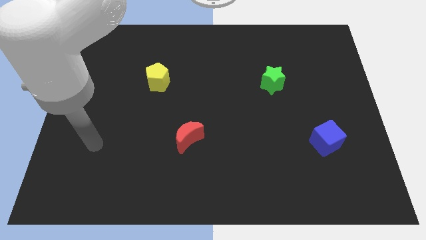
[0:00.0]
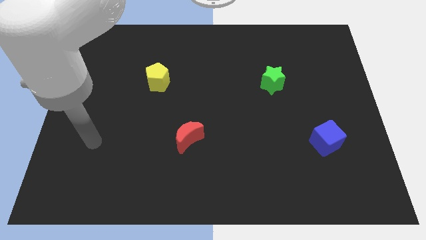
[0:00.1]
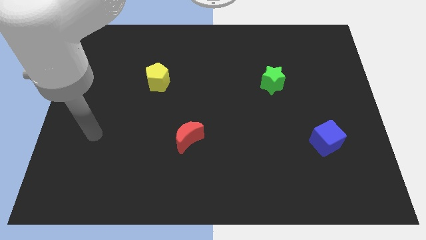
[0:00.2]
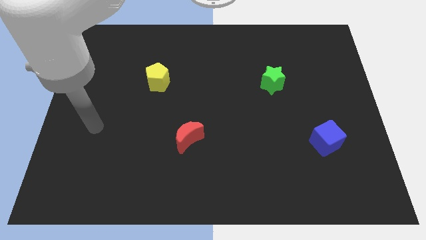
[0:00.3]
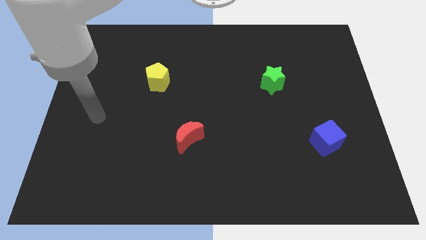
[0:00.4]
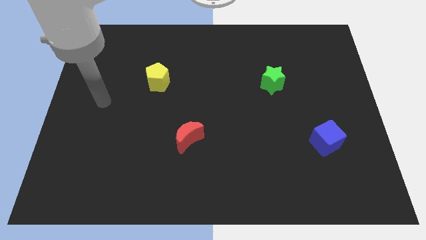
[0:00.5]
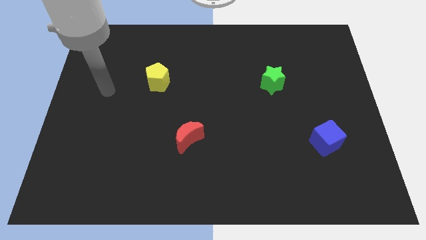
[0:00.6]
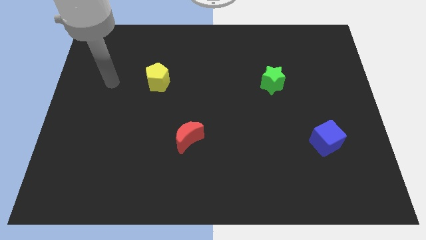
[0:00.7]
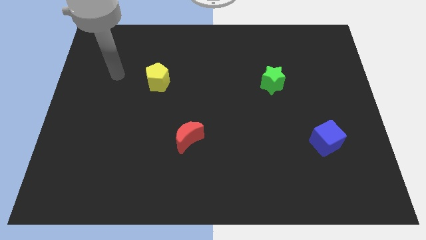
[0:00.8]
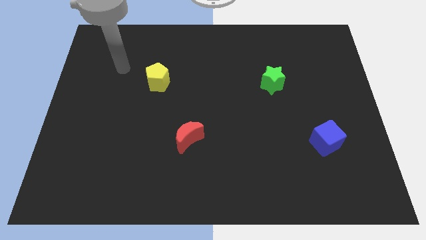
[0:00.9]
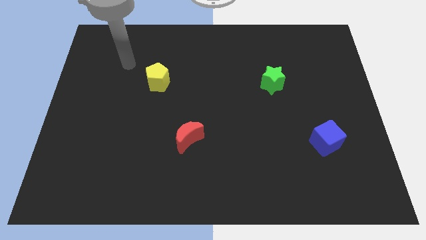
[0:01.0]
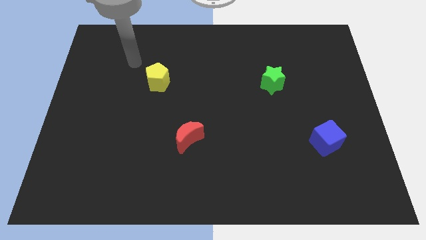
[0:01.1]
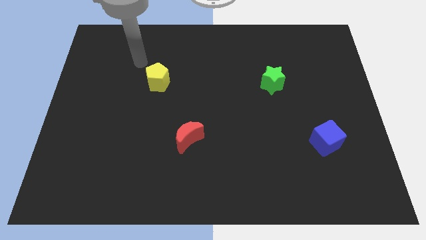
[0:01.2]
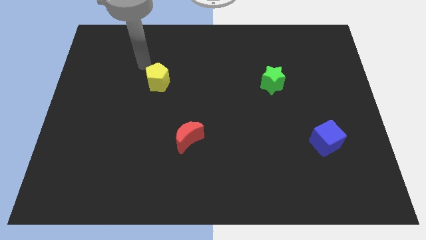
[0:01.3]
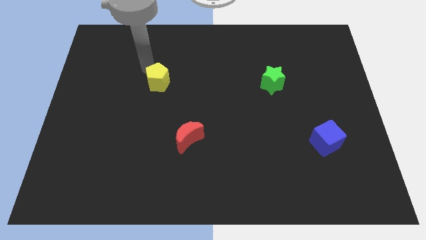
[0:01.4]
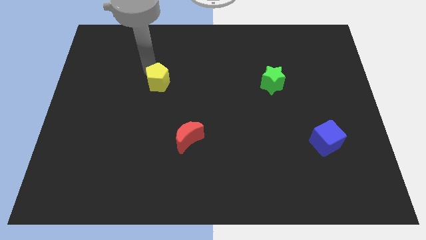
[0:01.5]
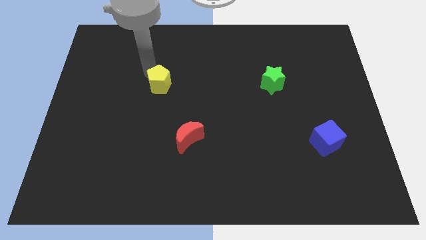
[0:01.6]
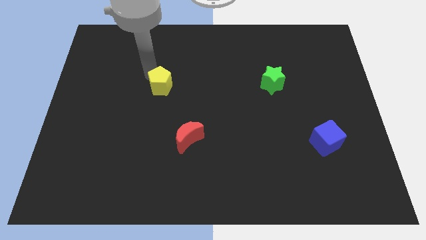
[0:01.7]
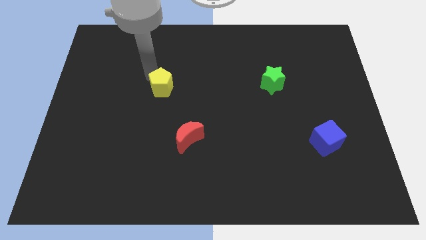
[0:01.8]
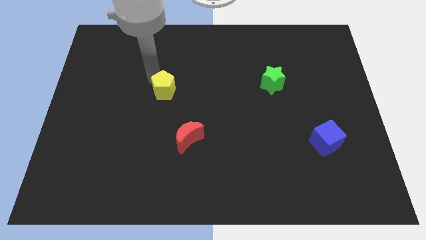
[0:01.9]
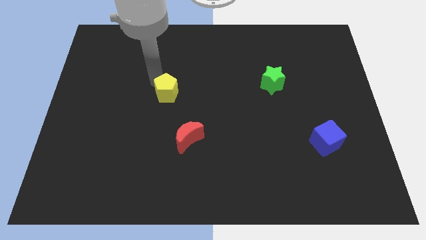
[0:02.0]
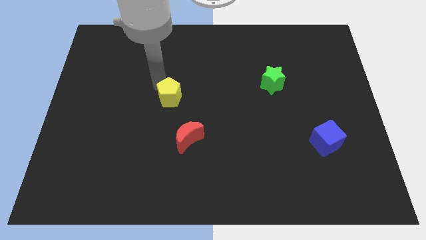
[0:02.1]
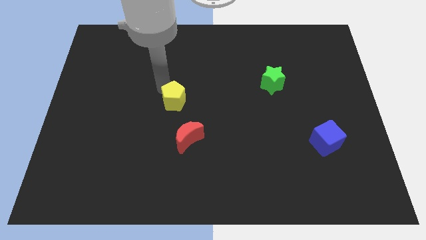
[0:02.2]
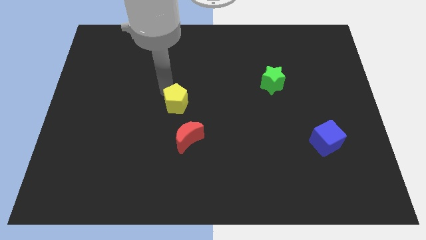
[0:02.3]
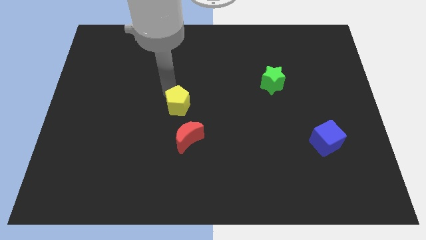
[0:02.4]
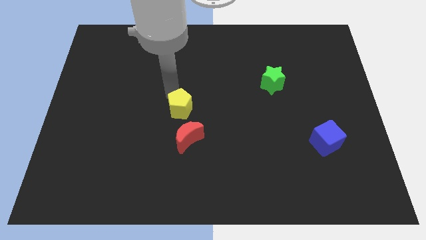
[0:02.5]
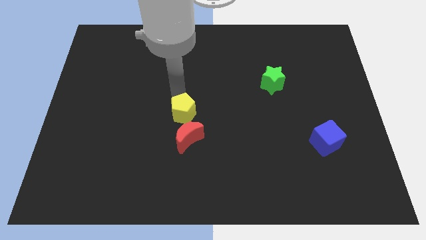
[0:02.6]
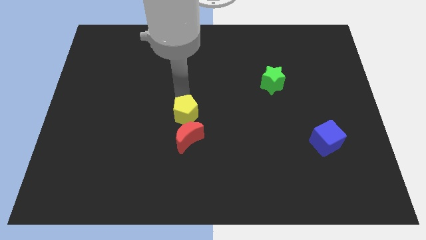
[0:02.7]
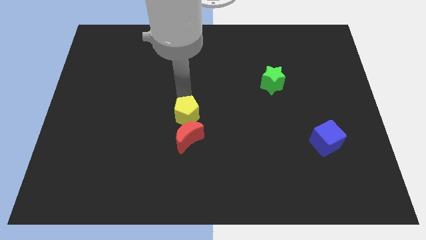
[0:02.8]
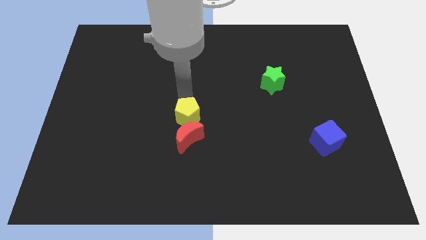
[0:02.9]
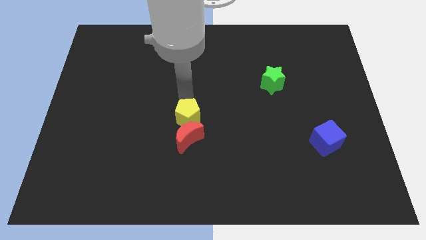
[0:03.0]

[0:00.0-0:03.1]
put the yellow pentagon next to the moon

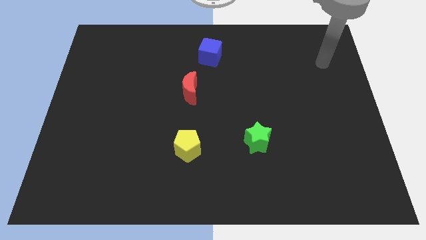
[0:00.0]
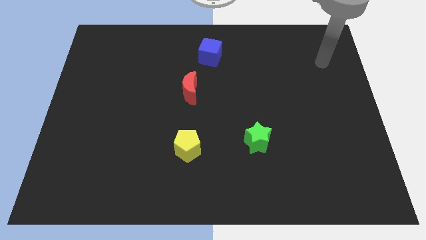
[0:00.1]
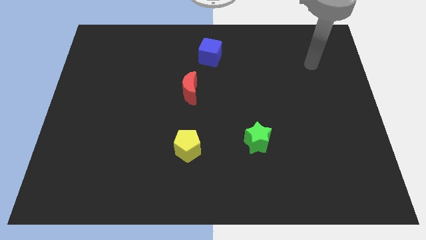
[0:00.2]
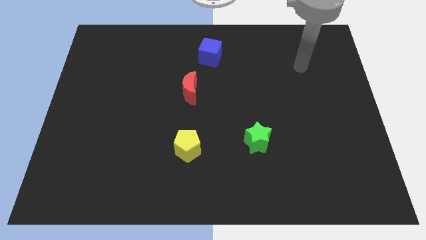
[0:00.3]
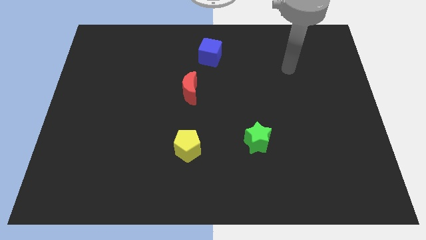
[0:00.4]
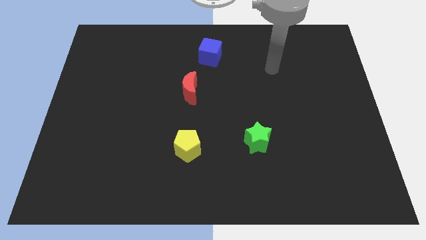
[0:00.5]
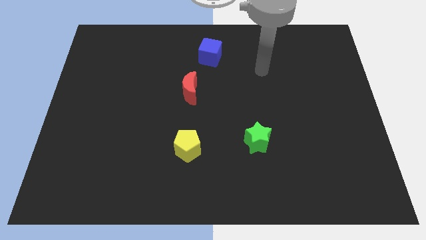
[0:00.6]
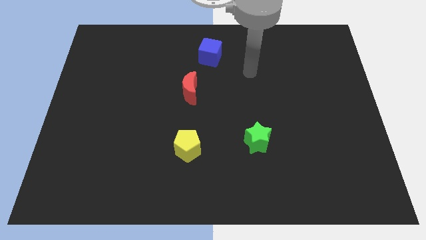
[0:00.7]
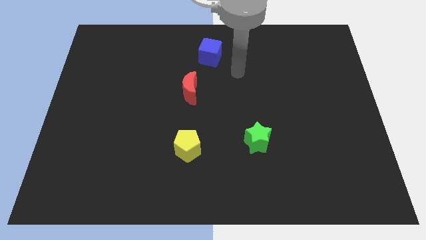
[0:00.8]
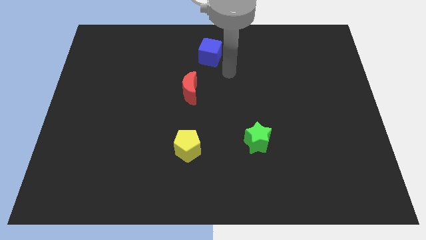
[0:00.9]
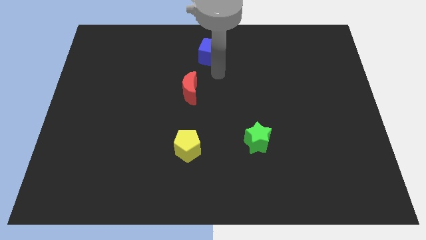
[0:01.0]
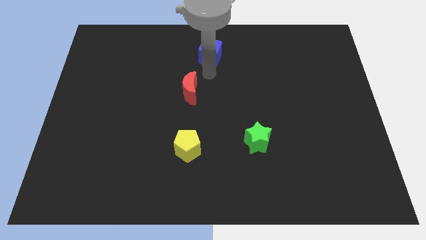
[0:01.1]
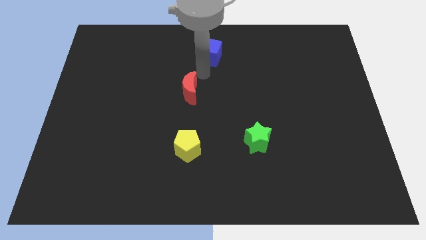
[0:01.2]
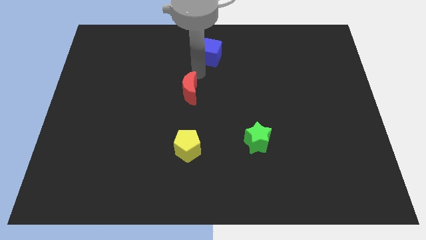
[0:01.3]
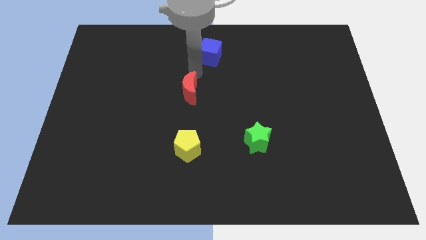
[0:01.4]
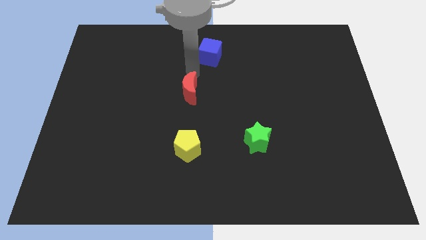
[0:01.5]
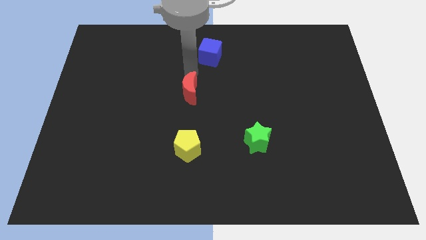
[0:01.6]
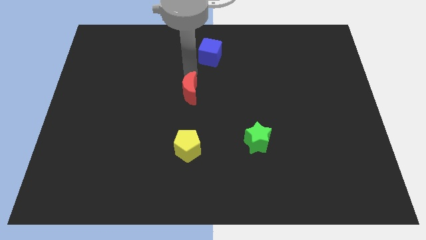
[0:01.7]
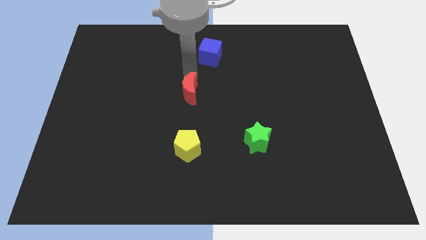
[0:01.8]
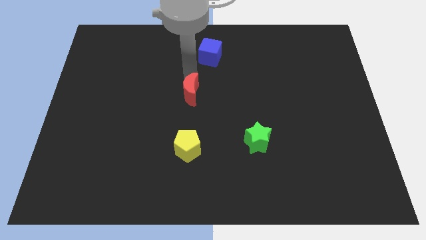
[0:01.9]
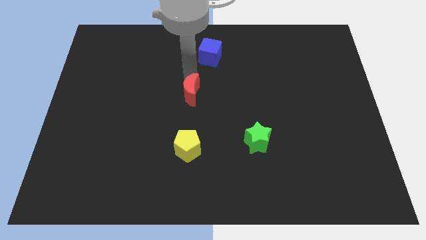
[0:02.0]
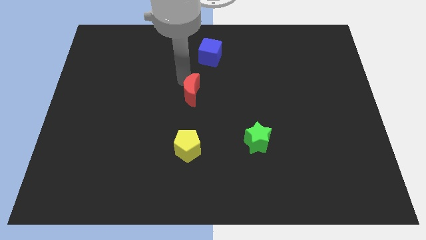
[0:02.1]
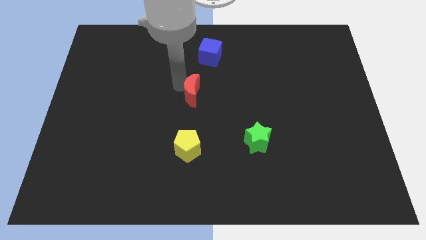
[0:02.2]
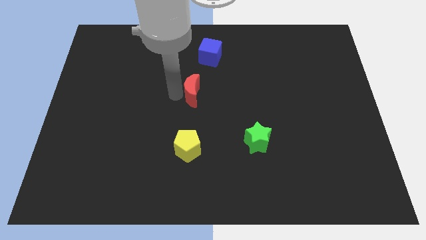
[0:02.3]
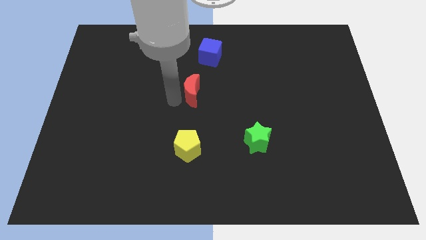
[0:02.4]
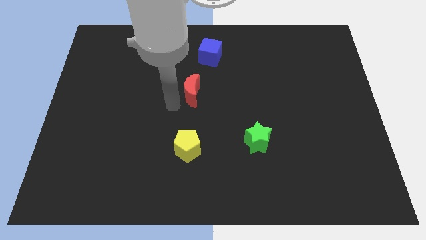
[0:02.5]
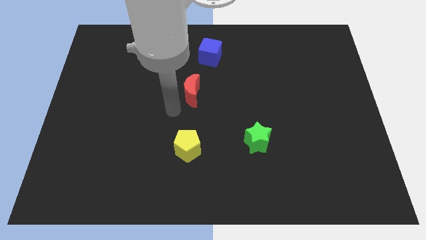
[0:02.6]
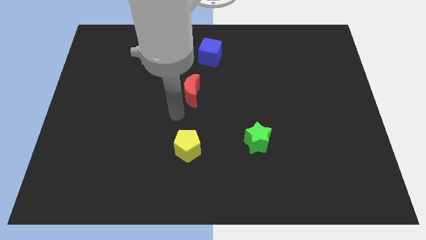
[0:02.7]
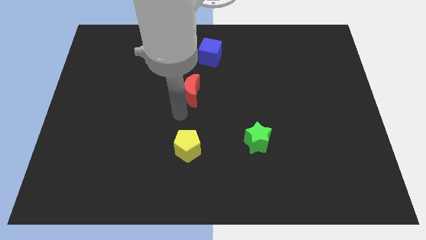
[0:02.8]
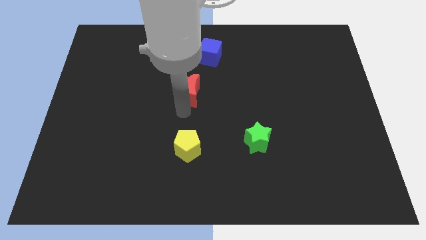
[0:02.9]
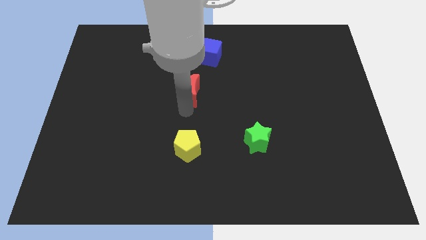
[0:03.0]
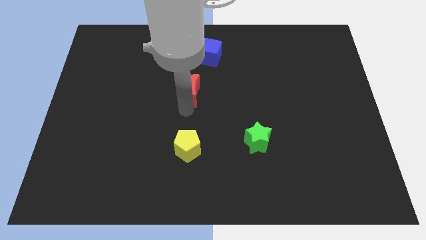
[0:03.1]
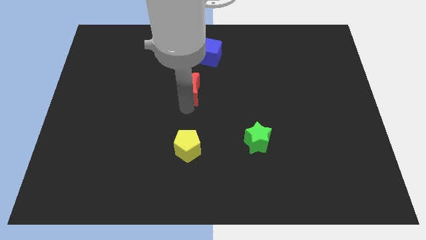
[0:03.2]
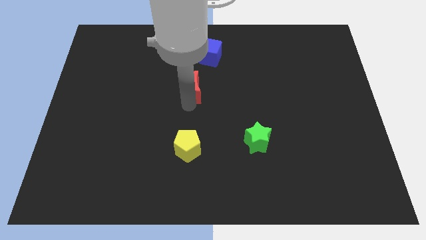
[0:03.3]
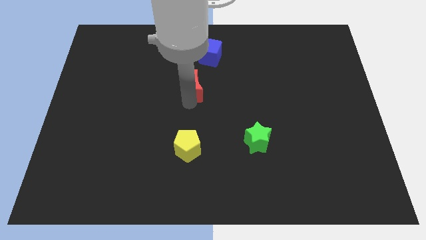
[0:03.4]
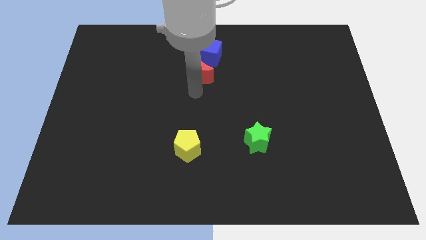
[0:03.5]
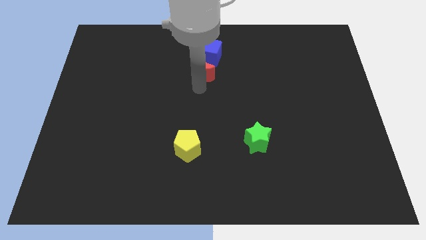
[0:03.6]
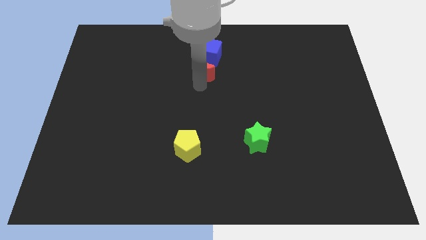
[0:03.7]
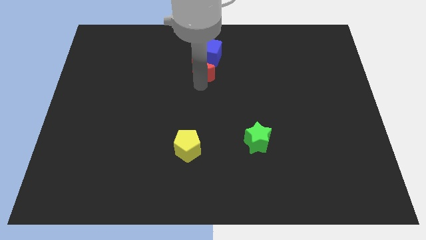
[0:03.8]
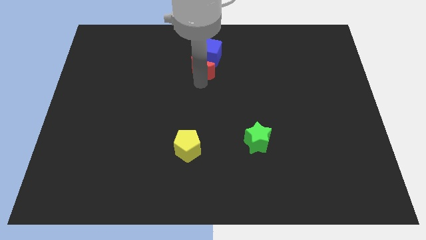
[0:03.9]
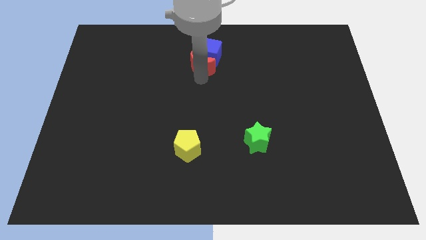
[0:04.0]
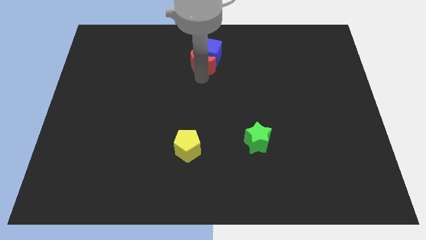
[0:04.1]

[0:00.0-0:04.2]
push the red moon close to the blue cube

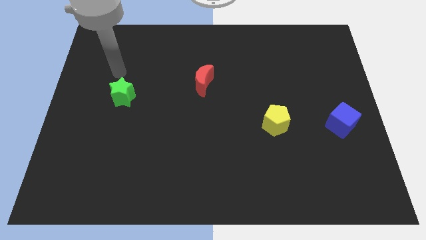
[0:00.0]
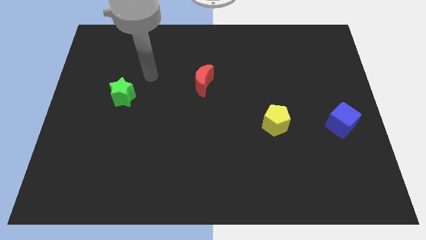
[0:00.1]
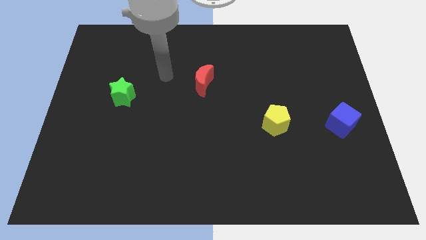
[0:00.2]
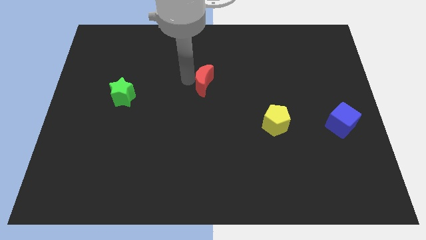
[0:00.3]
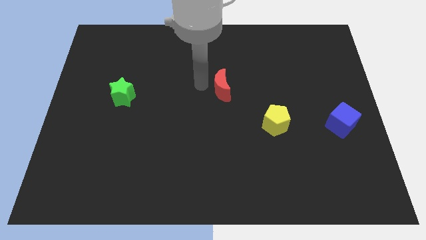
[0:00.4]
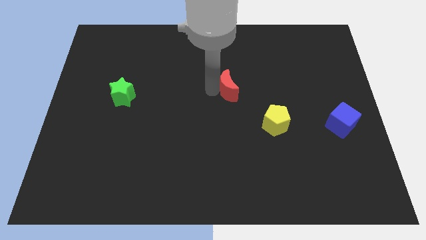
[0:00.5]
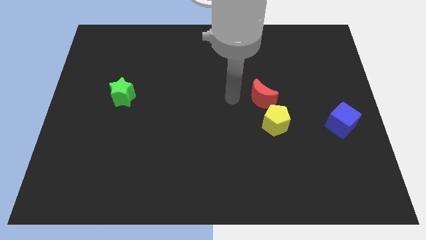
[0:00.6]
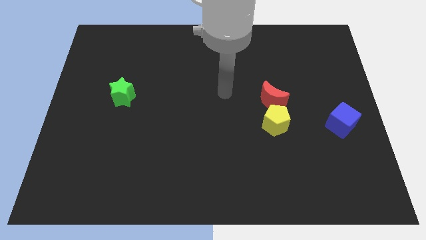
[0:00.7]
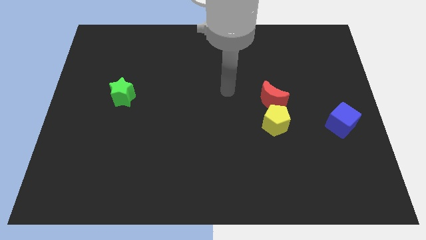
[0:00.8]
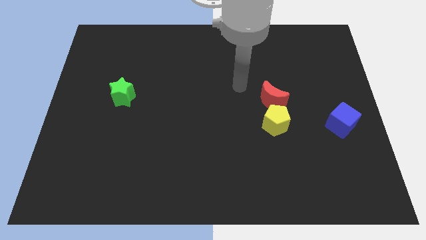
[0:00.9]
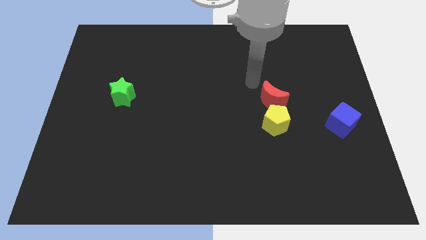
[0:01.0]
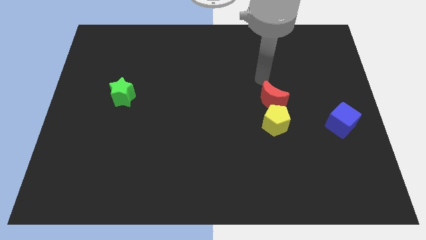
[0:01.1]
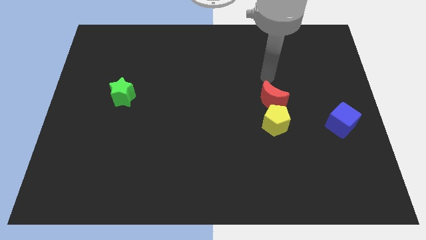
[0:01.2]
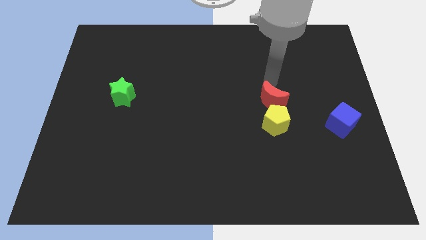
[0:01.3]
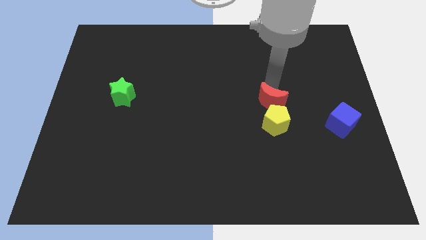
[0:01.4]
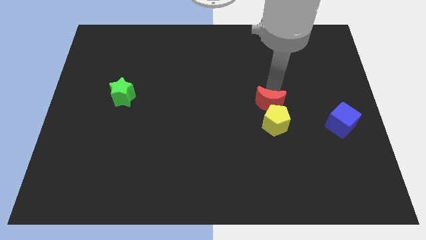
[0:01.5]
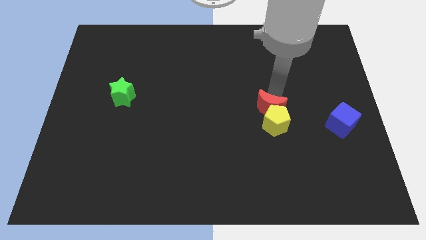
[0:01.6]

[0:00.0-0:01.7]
push the red block to the yellow pentagon
